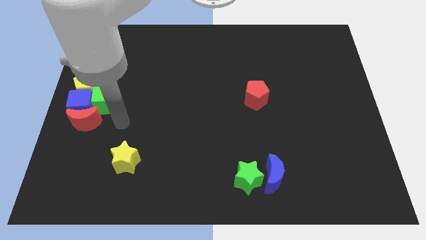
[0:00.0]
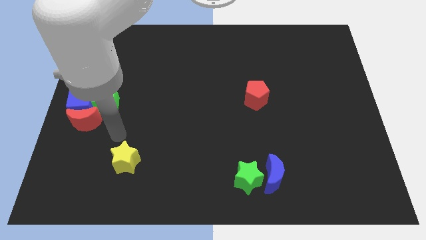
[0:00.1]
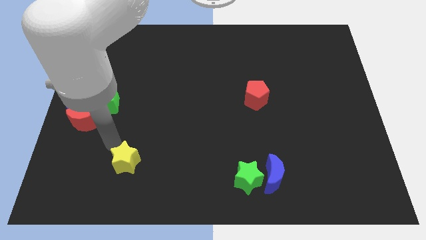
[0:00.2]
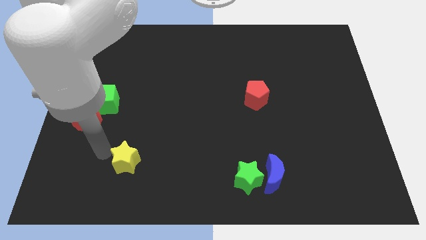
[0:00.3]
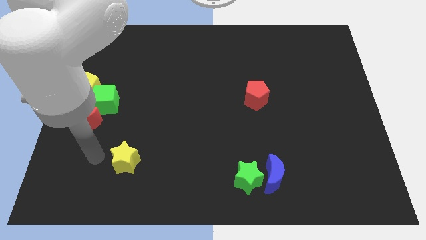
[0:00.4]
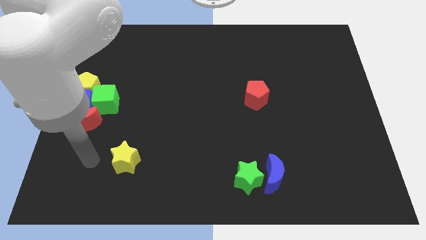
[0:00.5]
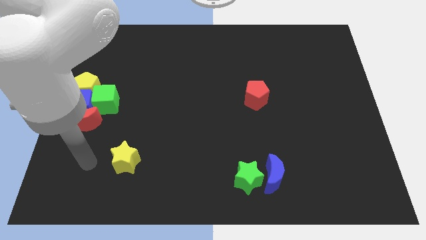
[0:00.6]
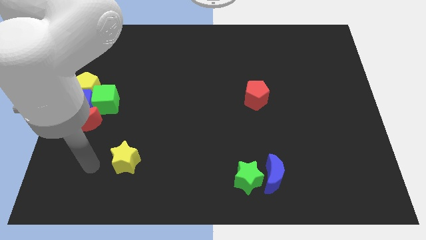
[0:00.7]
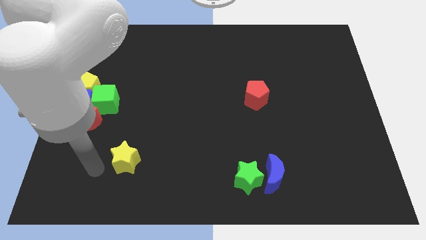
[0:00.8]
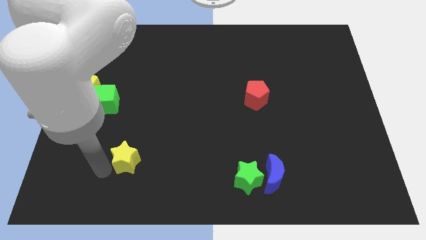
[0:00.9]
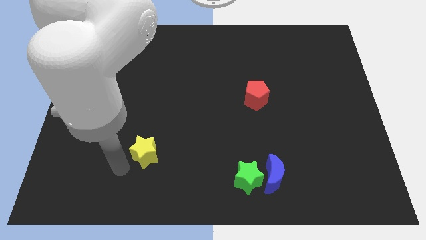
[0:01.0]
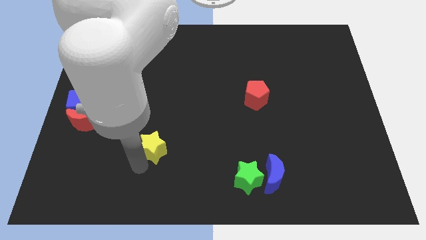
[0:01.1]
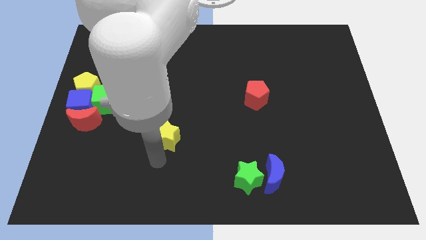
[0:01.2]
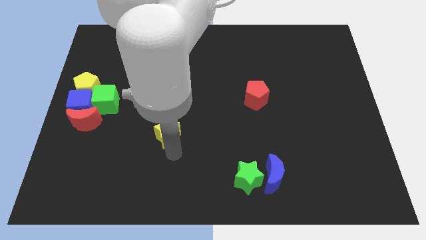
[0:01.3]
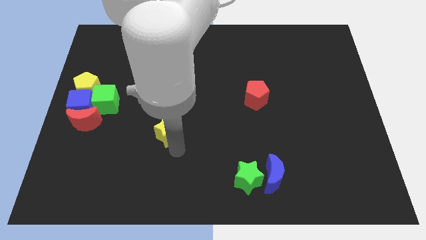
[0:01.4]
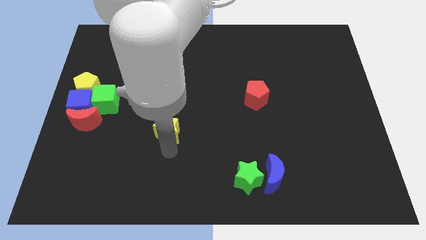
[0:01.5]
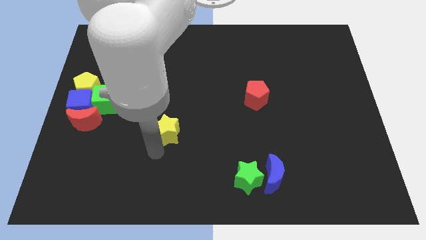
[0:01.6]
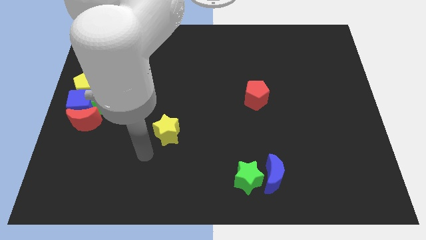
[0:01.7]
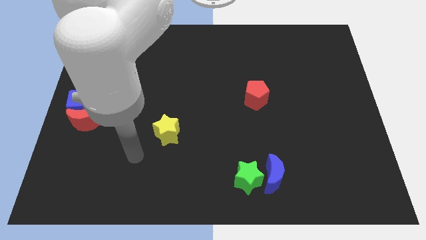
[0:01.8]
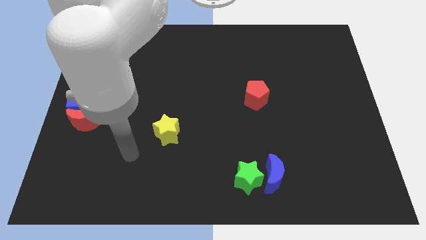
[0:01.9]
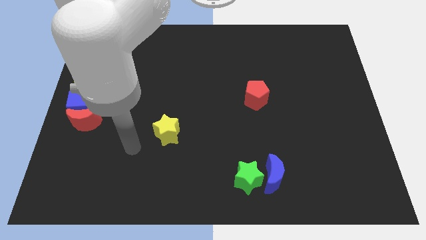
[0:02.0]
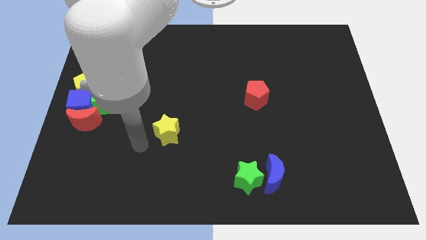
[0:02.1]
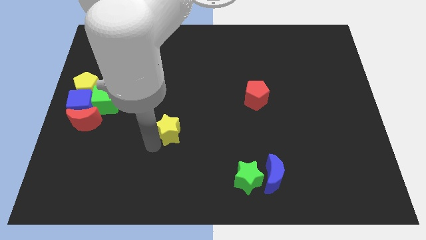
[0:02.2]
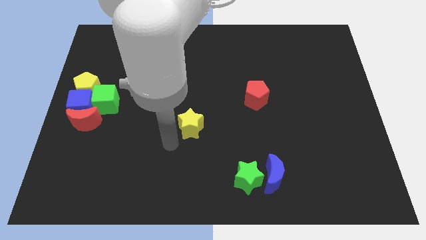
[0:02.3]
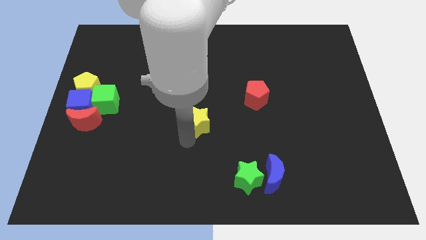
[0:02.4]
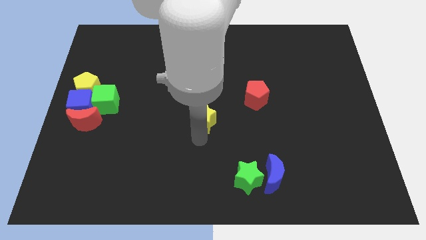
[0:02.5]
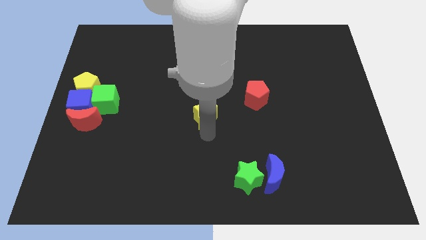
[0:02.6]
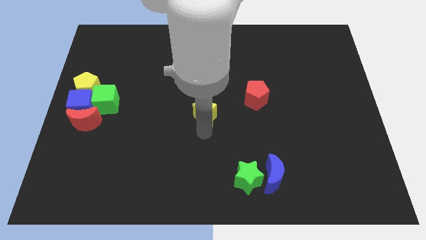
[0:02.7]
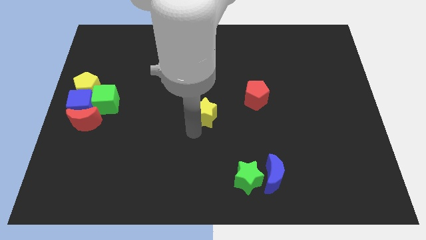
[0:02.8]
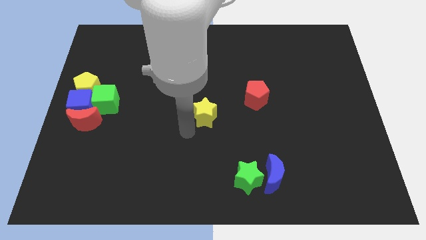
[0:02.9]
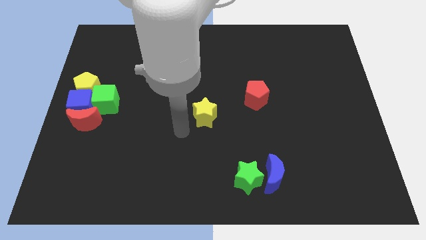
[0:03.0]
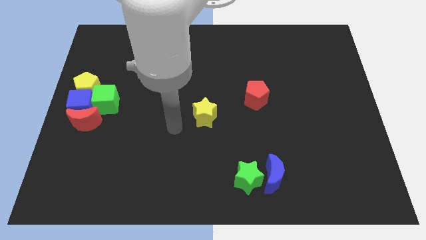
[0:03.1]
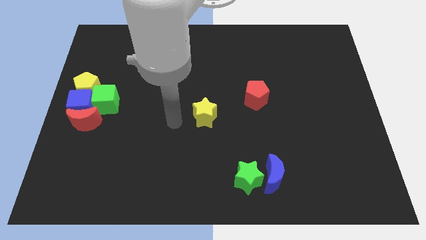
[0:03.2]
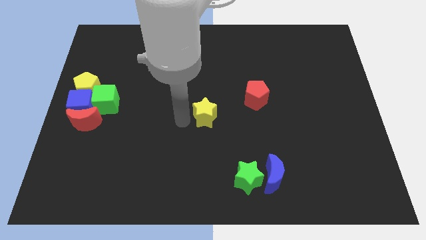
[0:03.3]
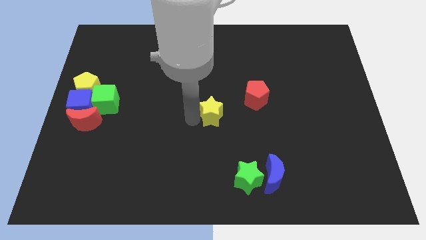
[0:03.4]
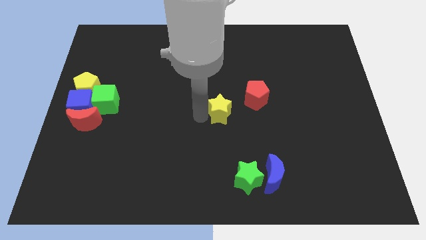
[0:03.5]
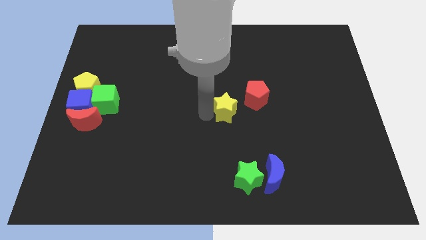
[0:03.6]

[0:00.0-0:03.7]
put the yellow star at the center of the board

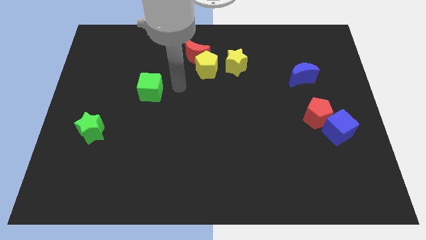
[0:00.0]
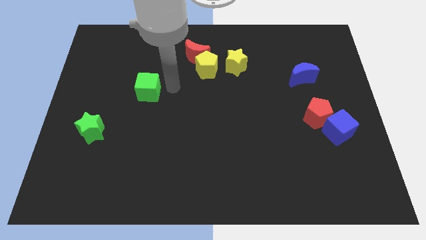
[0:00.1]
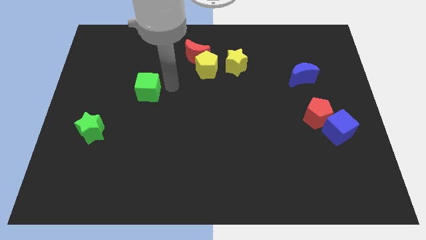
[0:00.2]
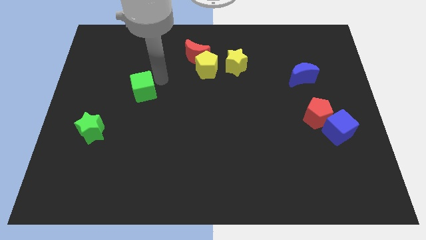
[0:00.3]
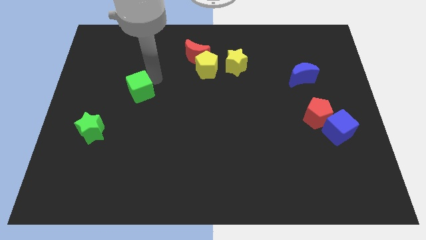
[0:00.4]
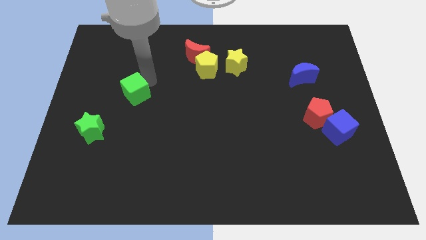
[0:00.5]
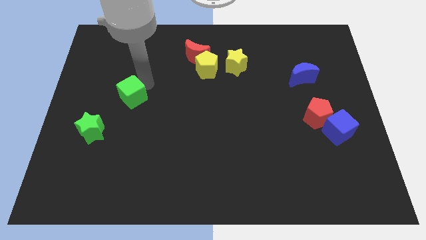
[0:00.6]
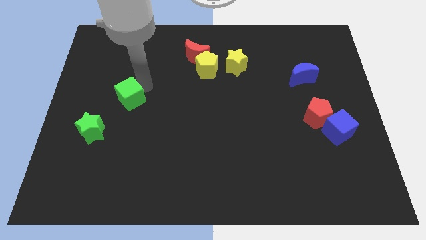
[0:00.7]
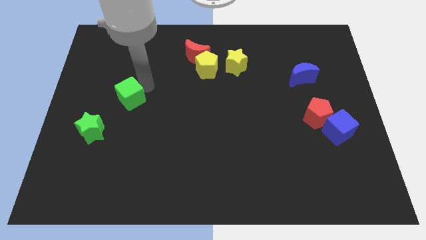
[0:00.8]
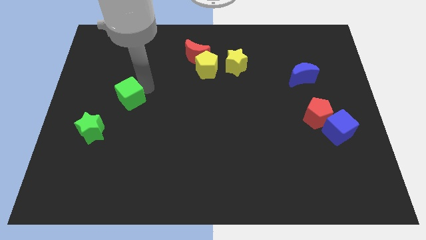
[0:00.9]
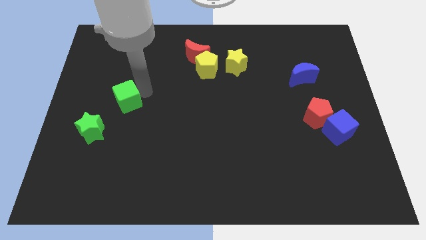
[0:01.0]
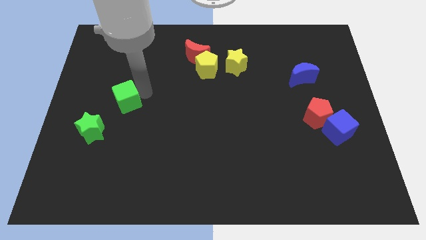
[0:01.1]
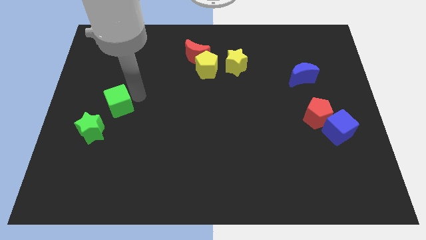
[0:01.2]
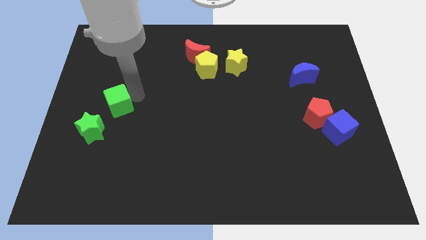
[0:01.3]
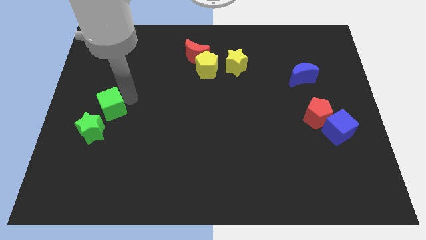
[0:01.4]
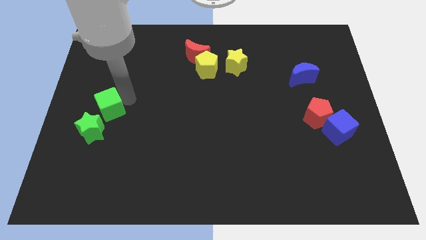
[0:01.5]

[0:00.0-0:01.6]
push the green cube close to the green star

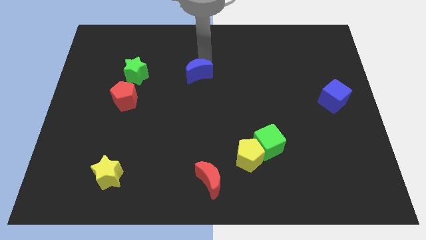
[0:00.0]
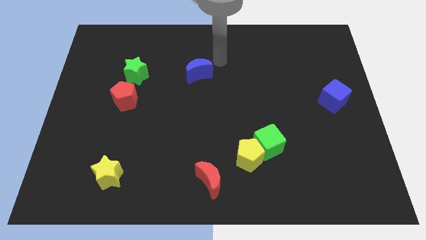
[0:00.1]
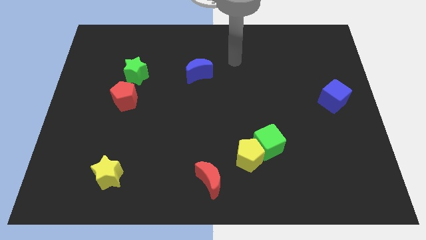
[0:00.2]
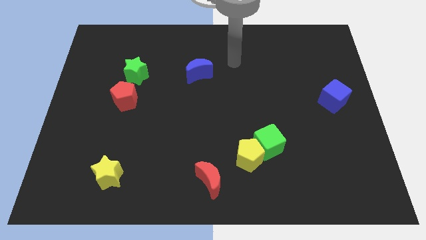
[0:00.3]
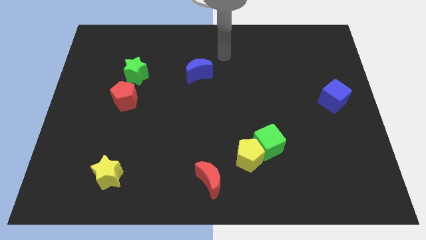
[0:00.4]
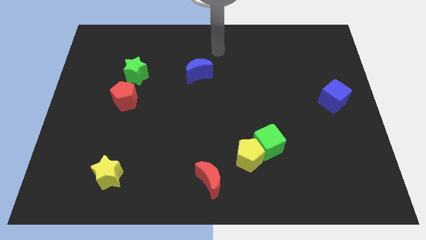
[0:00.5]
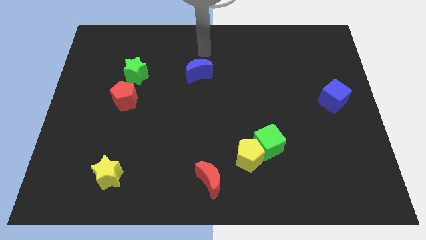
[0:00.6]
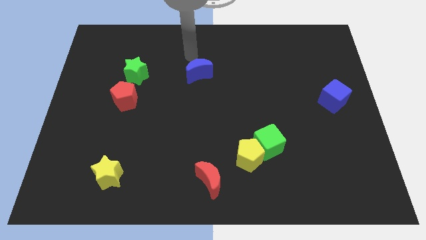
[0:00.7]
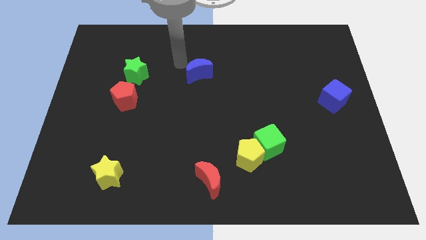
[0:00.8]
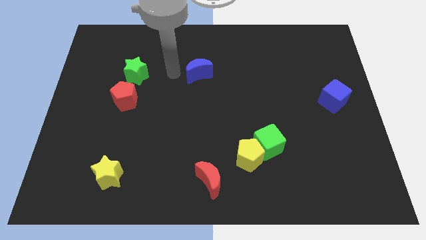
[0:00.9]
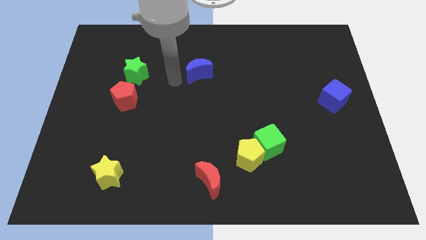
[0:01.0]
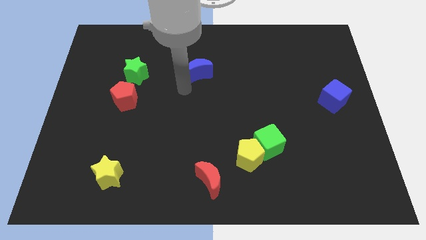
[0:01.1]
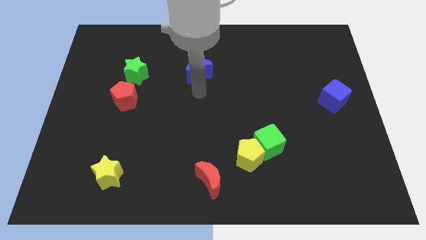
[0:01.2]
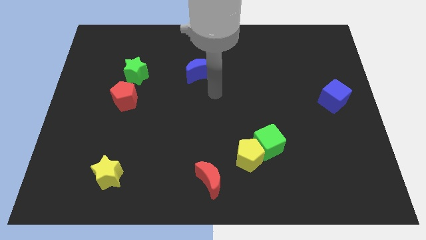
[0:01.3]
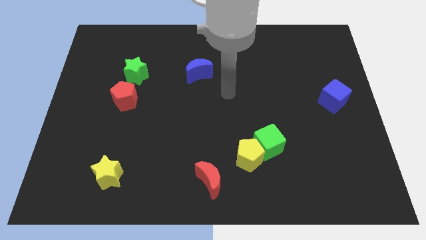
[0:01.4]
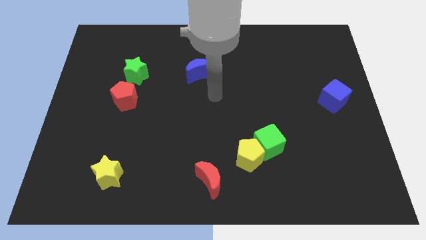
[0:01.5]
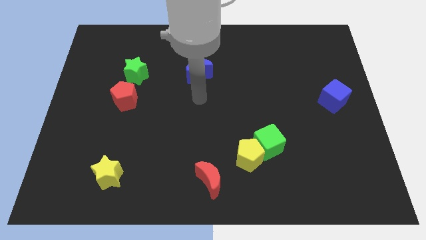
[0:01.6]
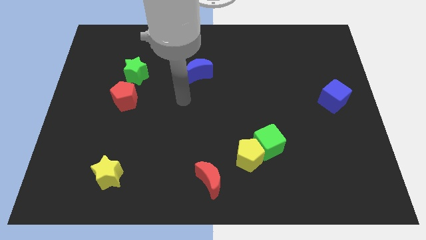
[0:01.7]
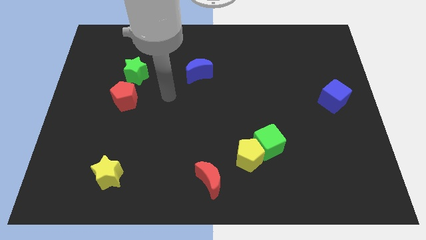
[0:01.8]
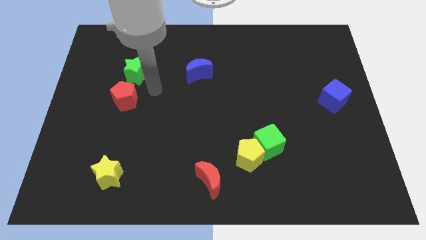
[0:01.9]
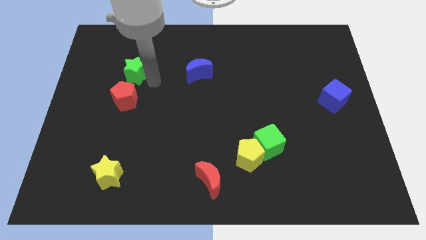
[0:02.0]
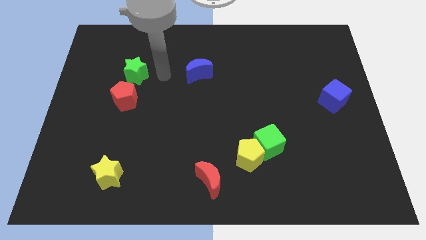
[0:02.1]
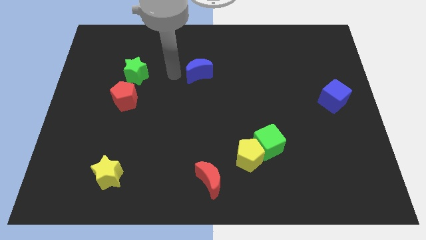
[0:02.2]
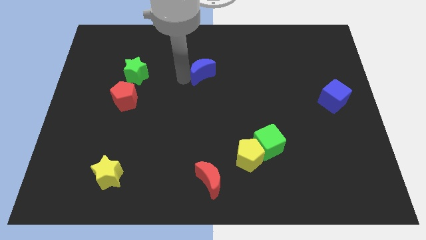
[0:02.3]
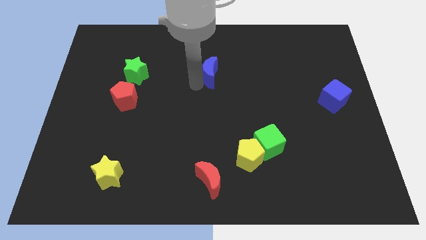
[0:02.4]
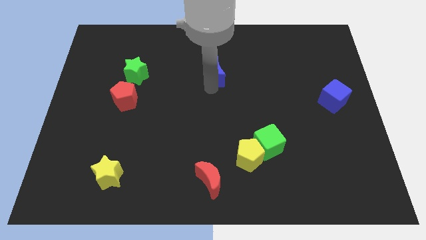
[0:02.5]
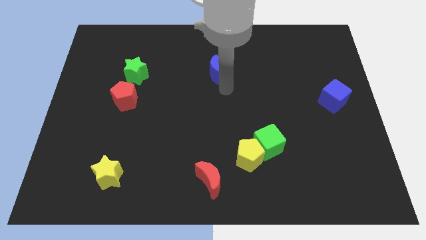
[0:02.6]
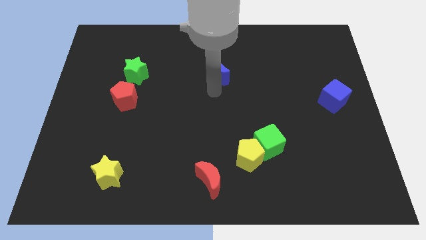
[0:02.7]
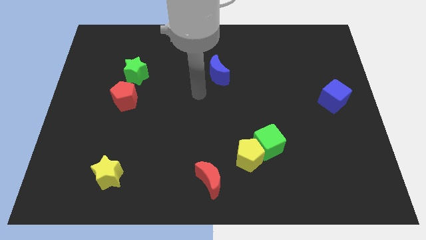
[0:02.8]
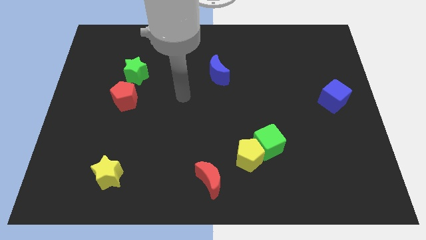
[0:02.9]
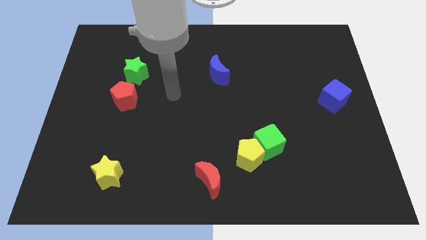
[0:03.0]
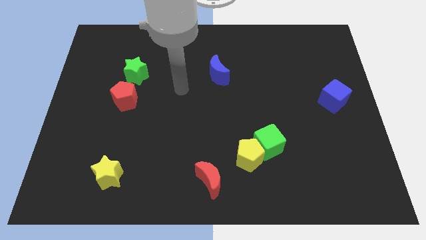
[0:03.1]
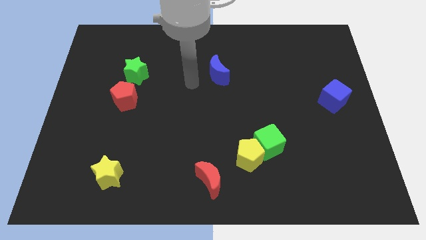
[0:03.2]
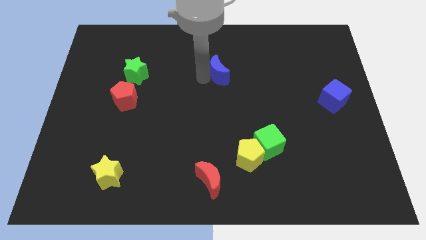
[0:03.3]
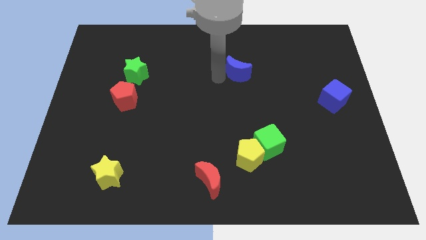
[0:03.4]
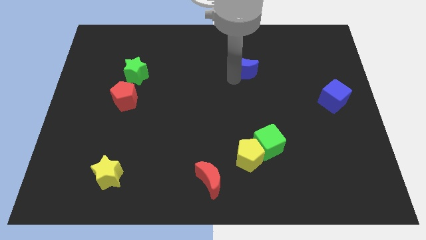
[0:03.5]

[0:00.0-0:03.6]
put the blue moon vertically above the yellow pentagon

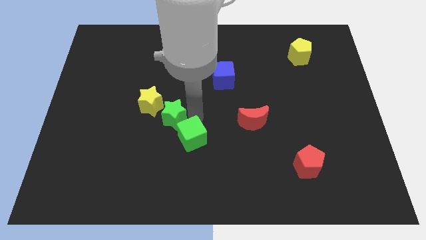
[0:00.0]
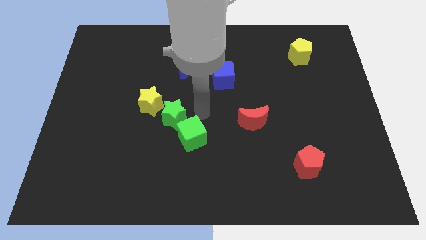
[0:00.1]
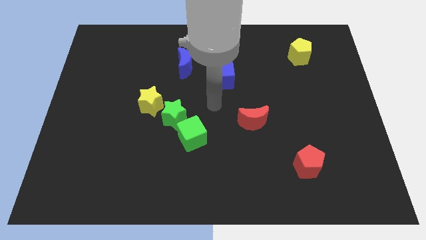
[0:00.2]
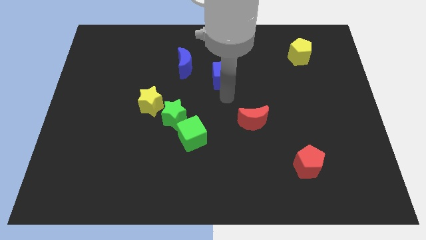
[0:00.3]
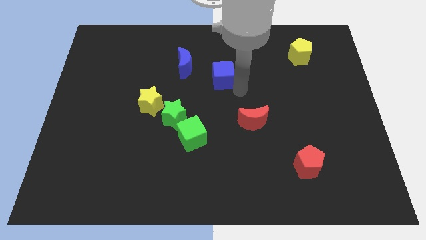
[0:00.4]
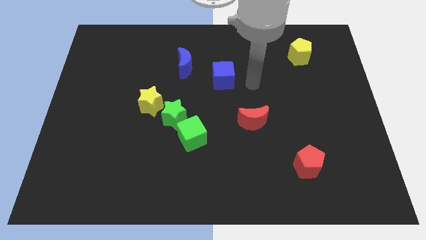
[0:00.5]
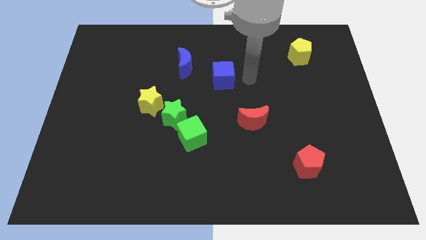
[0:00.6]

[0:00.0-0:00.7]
point your hand to the right of the blue cube
